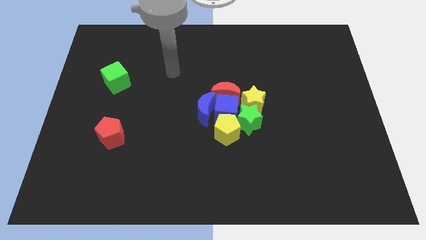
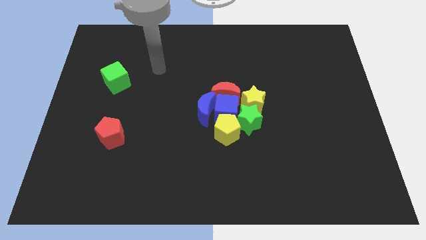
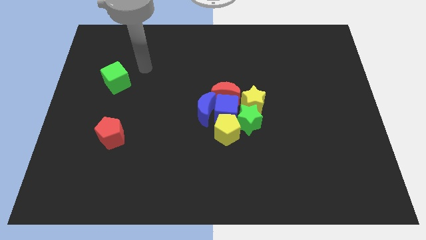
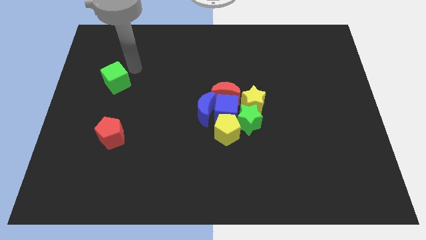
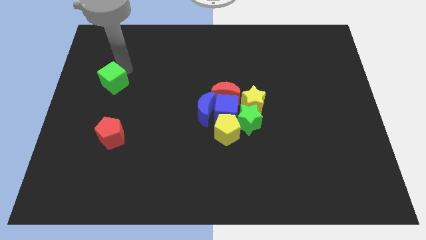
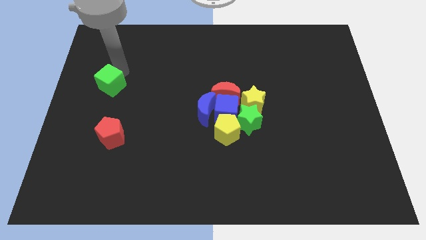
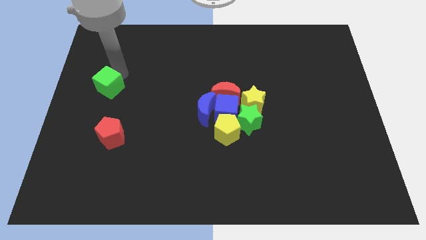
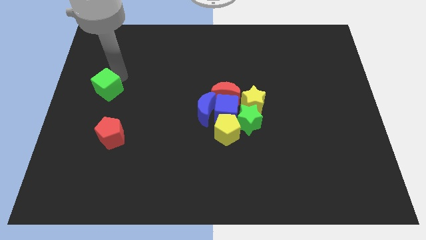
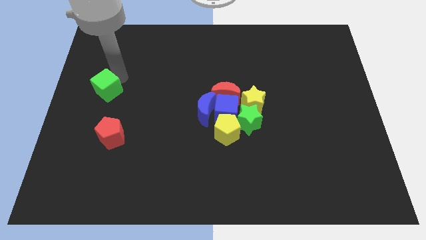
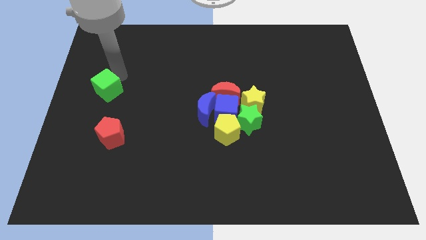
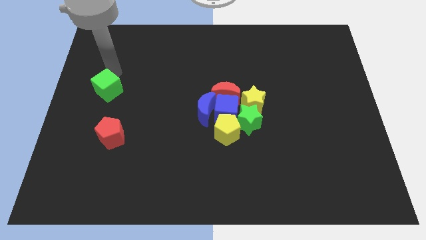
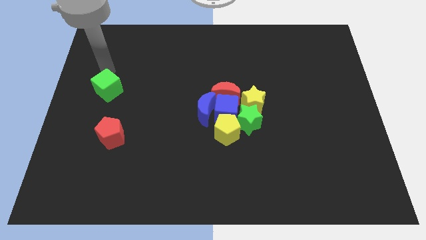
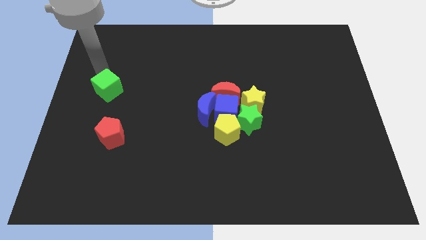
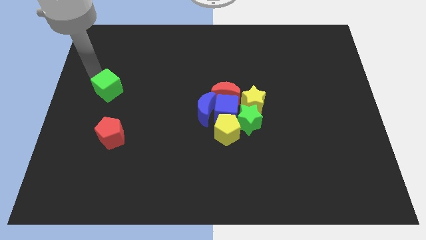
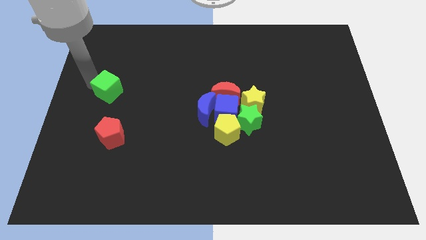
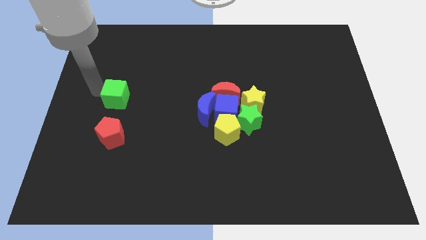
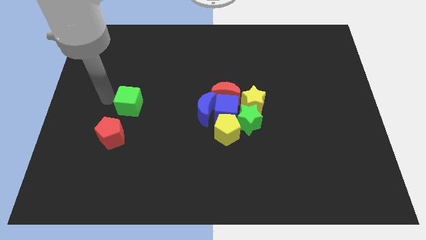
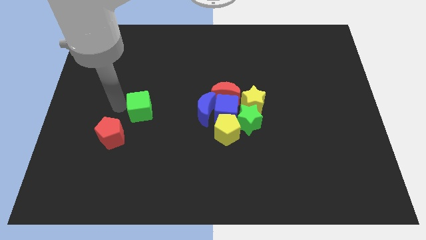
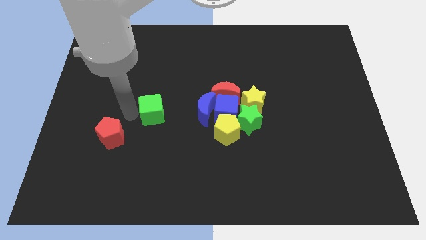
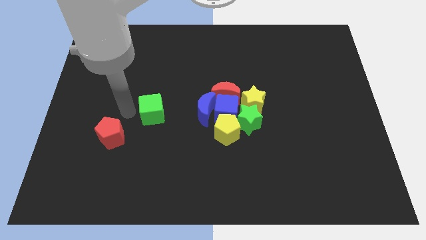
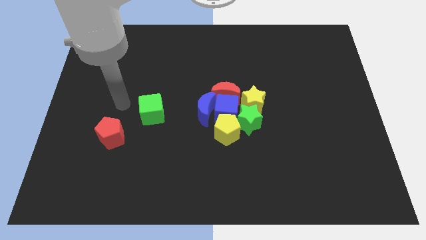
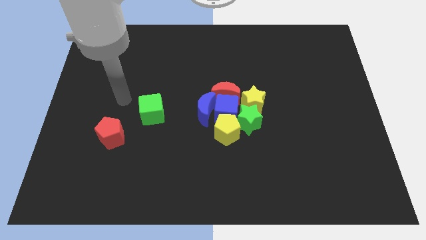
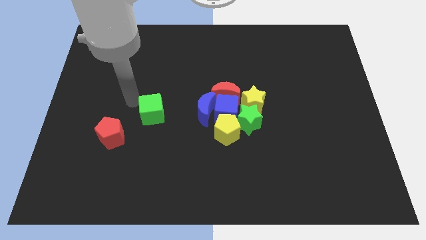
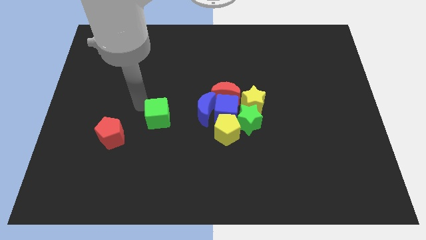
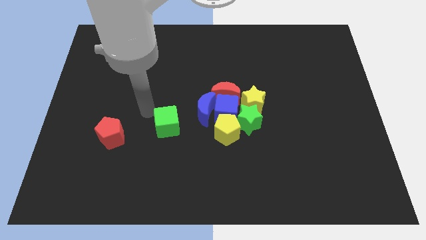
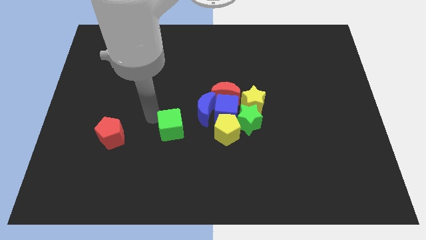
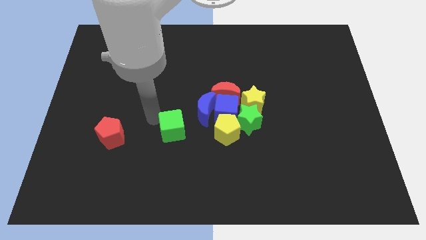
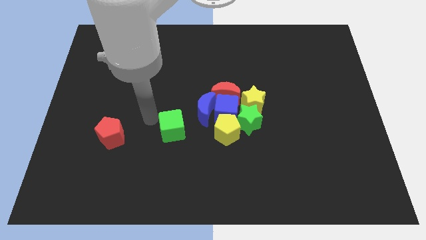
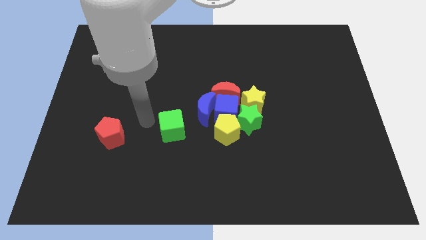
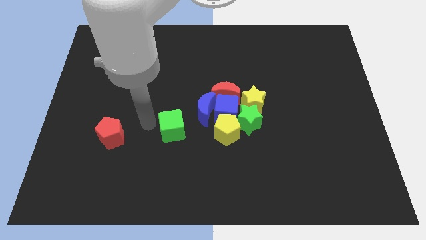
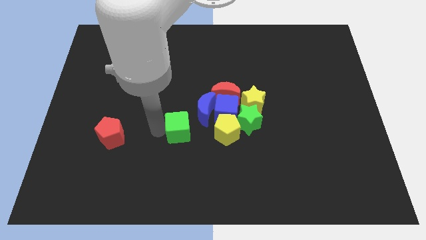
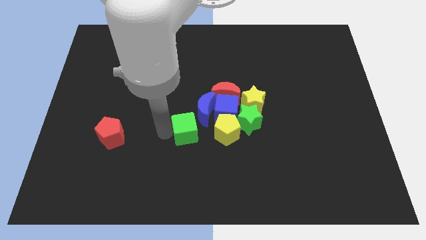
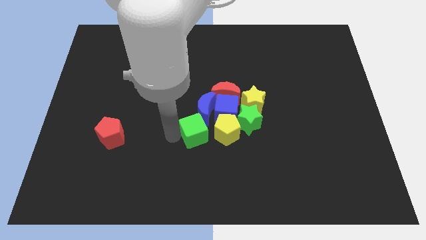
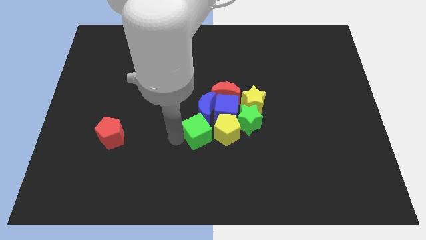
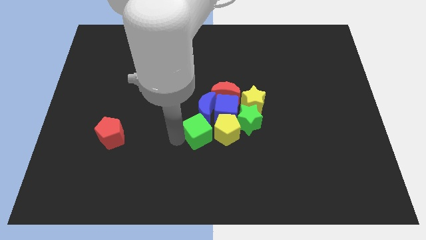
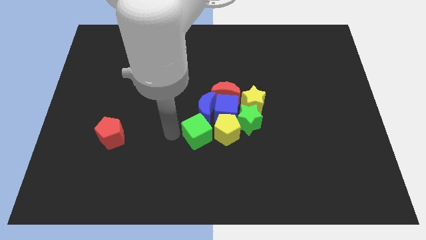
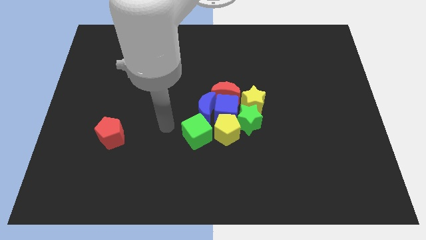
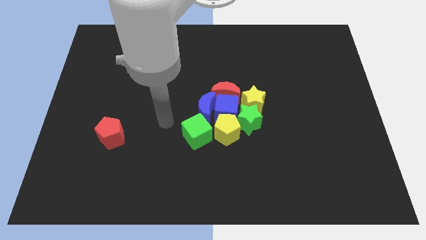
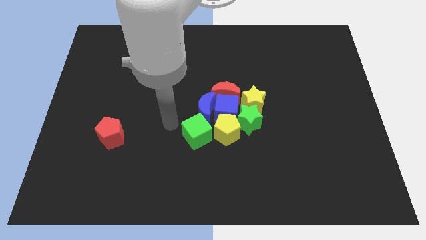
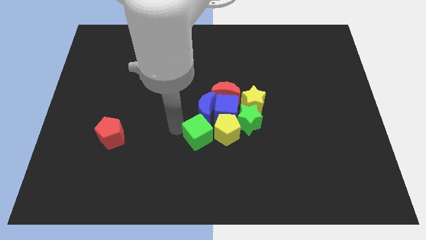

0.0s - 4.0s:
move the green cube to the left side of the yellow pentagon

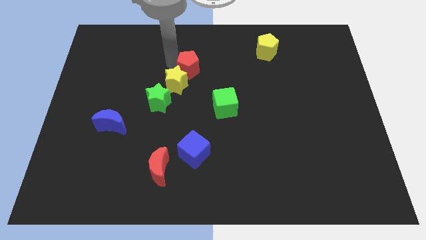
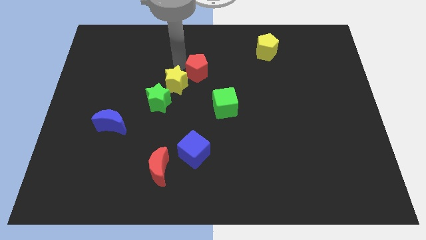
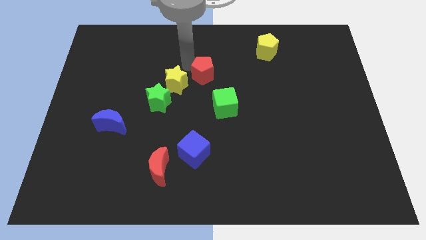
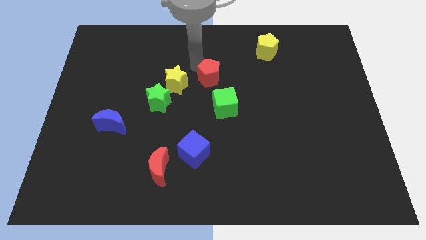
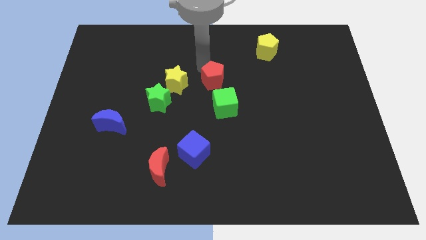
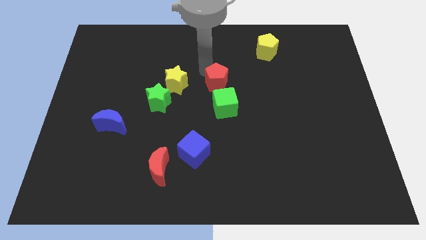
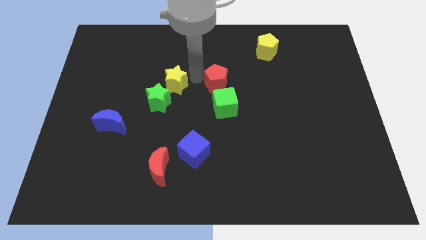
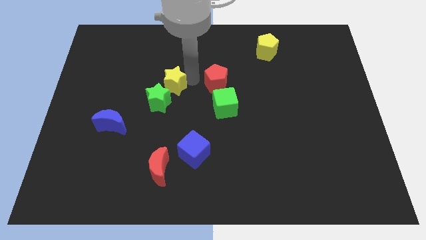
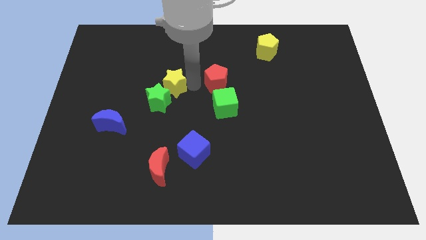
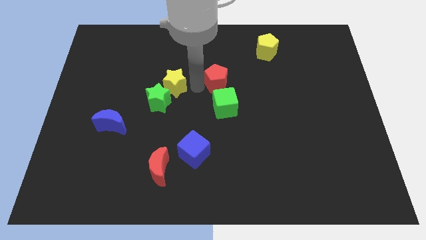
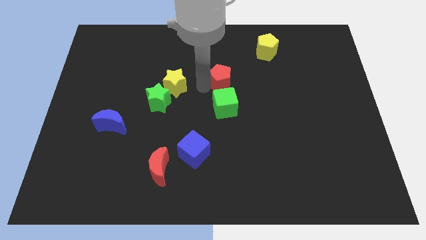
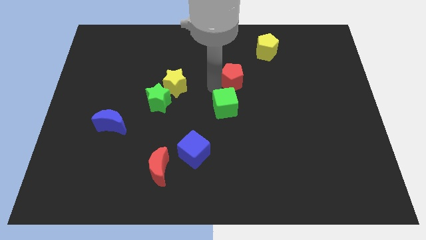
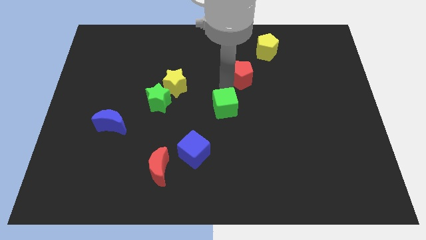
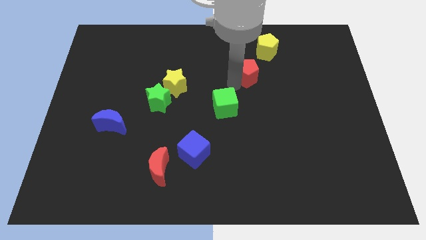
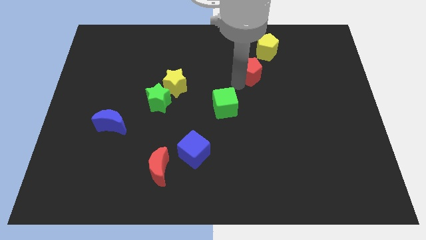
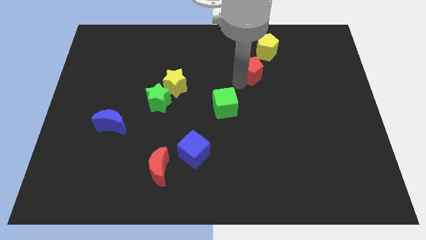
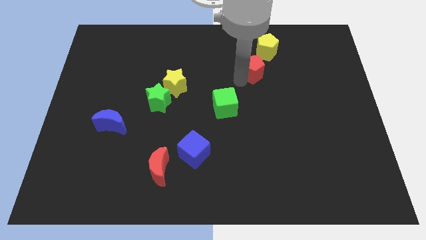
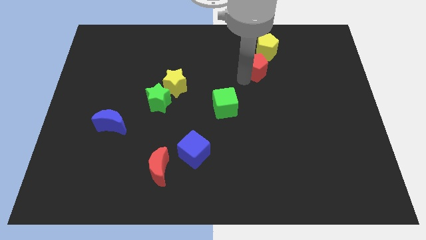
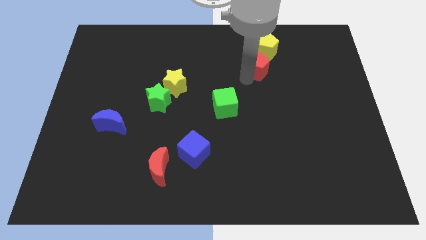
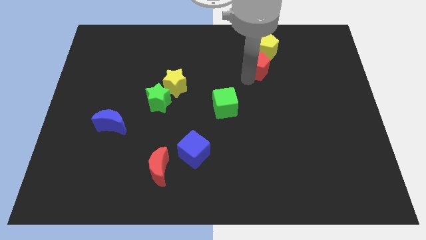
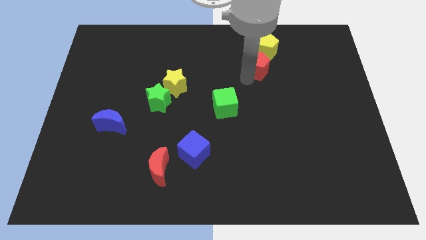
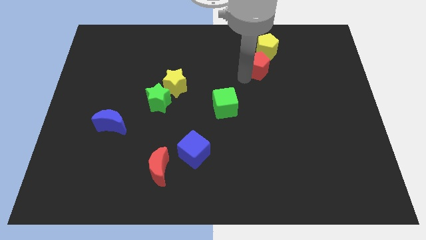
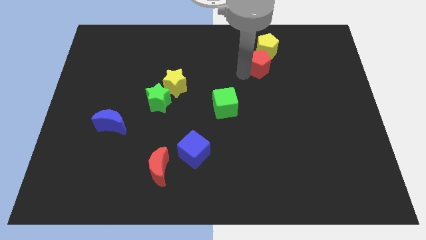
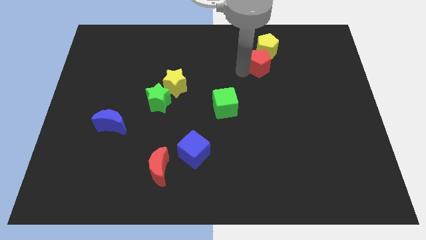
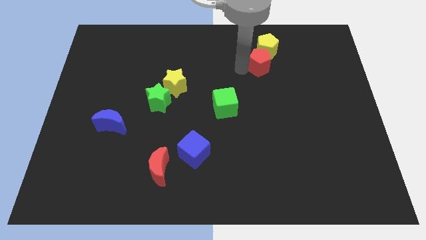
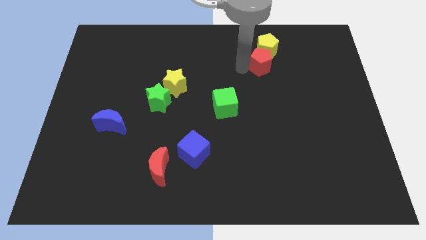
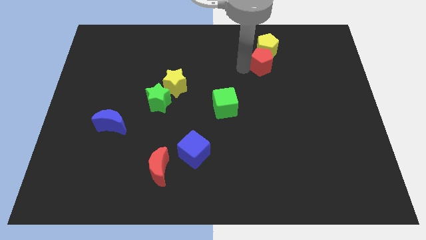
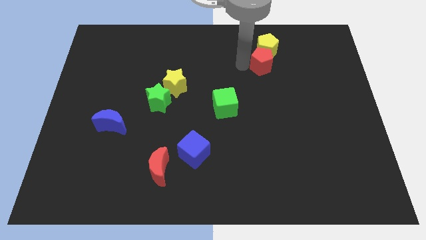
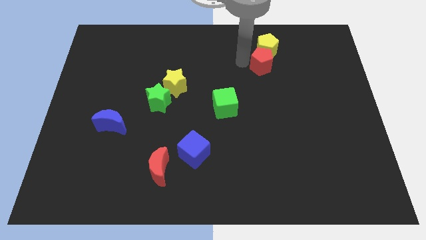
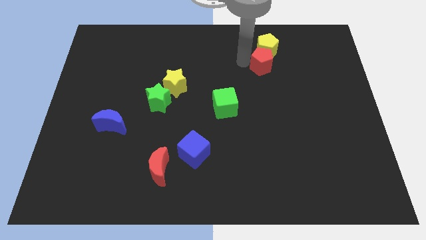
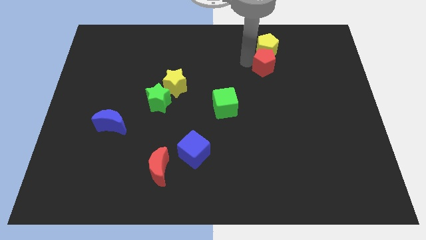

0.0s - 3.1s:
place the red pentagon below to the yellow pentagon

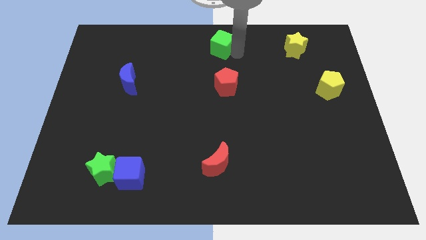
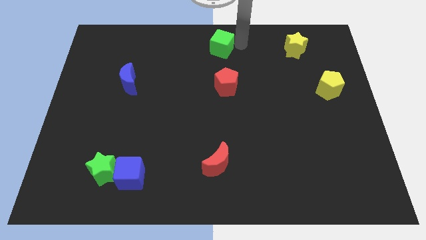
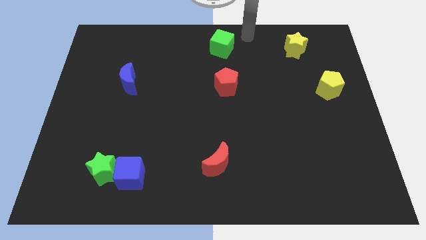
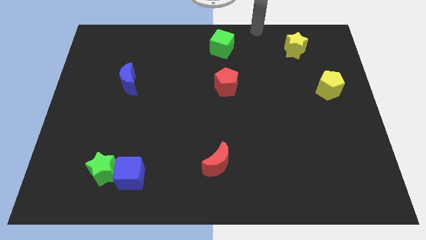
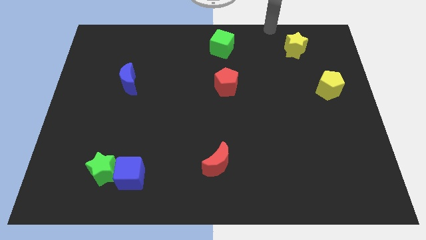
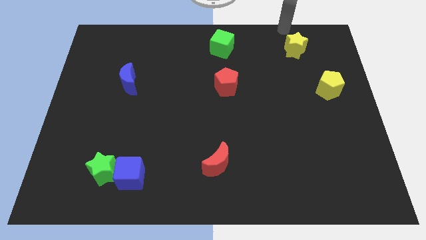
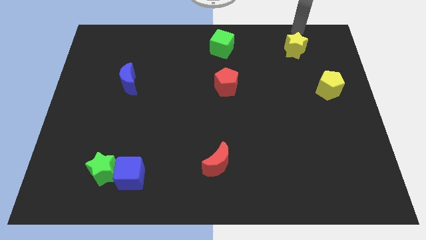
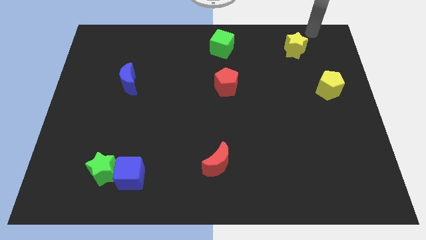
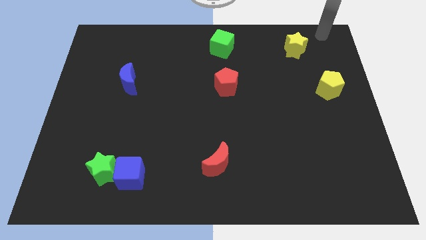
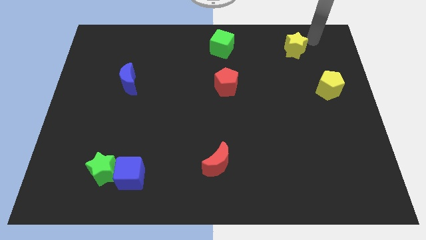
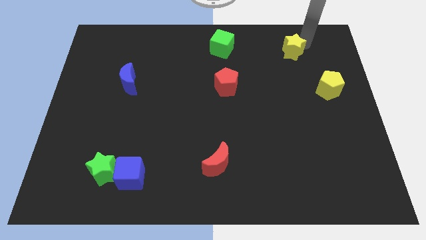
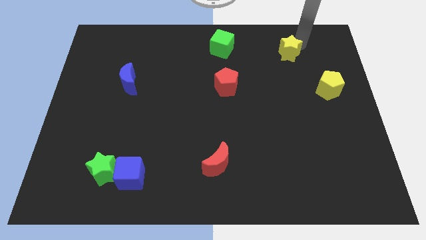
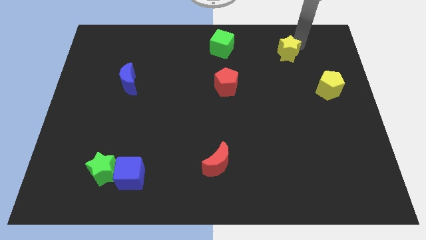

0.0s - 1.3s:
tap the top right side of the yelllow star

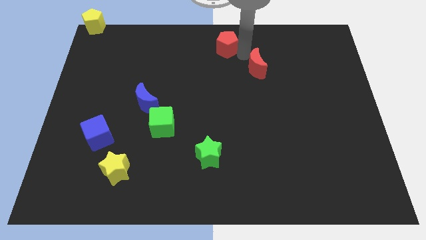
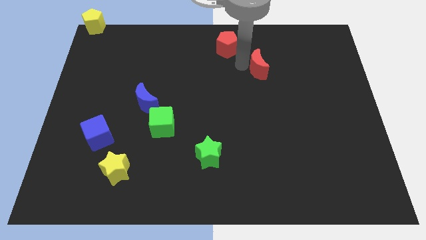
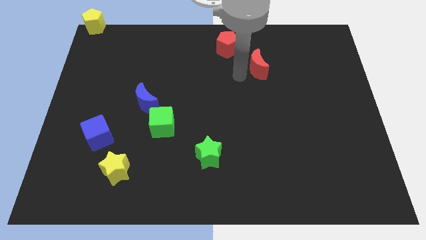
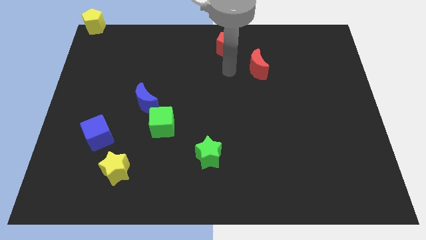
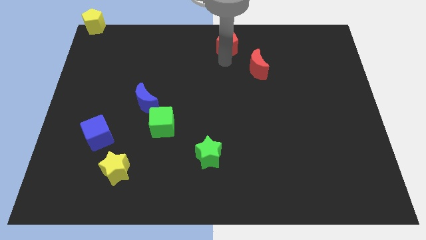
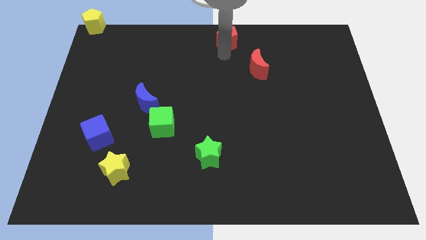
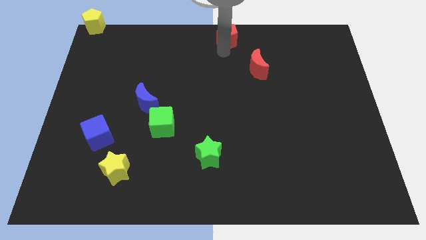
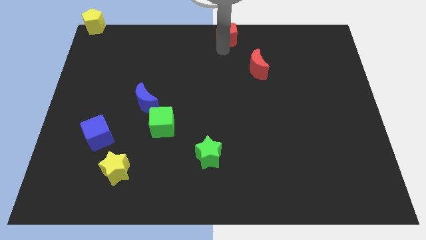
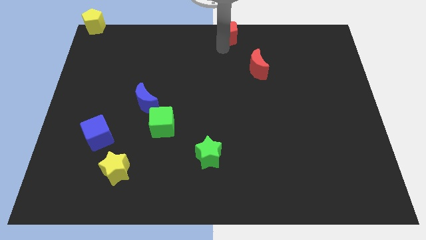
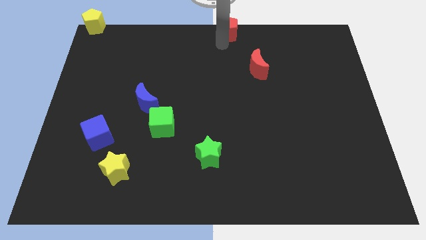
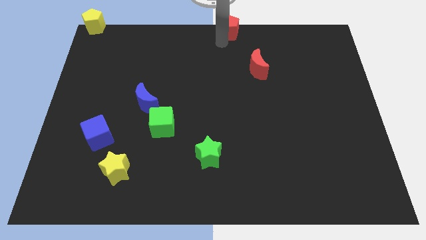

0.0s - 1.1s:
place red pentagon towards top middle of the board
